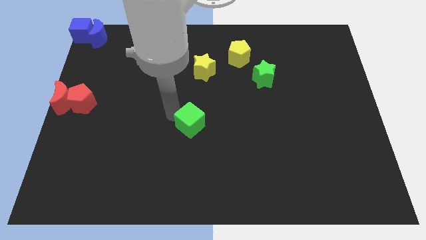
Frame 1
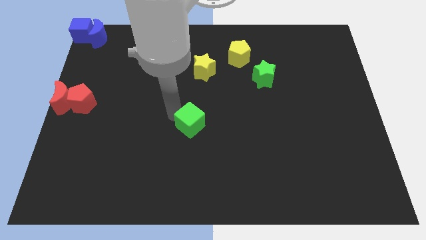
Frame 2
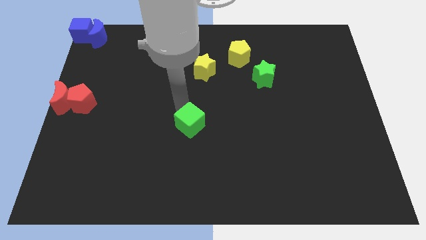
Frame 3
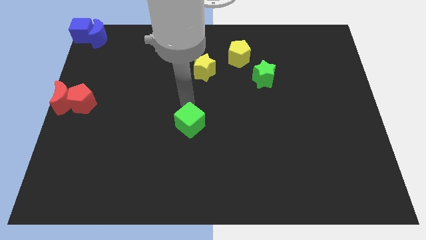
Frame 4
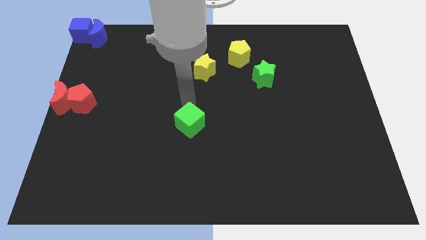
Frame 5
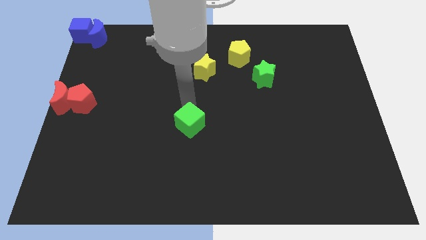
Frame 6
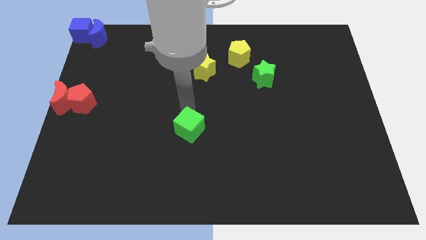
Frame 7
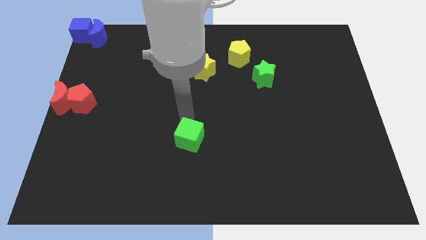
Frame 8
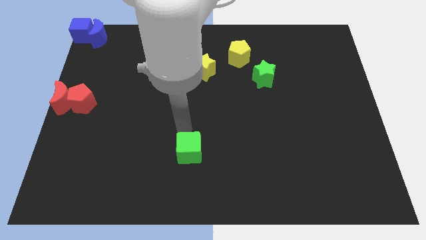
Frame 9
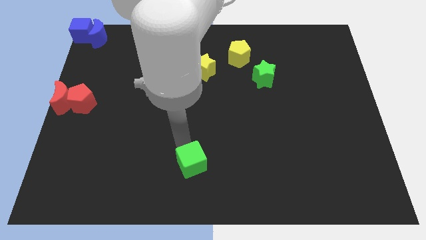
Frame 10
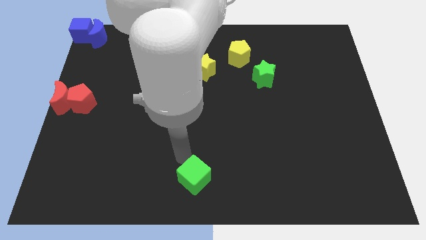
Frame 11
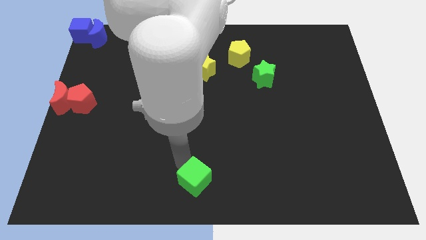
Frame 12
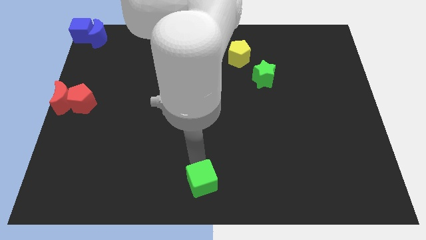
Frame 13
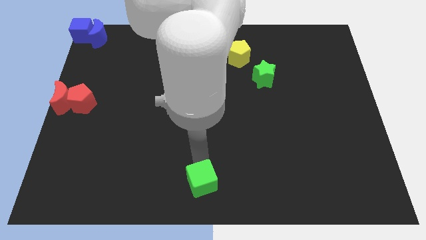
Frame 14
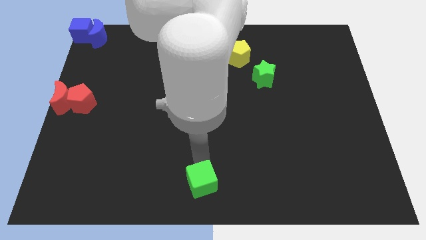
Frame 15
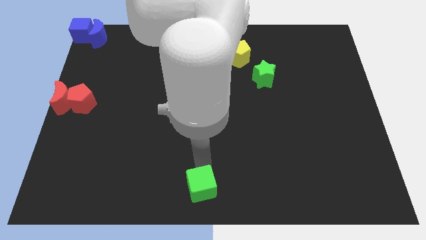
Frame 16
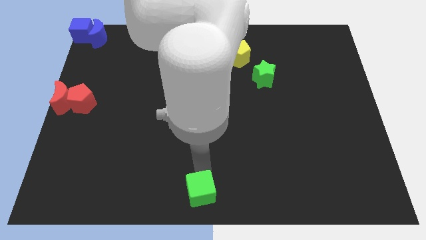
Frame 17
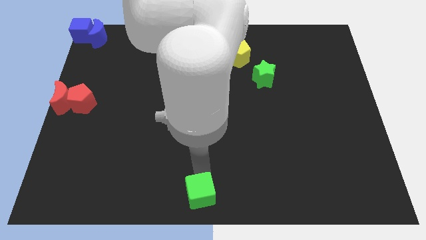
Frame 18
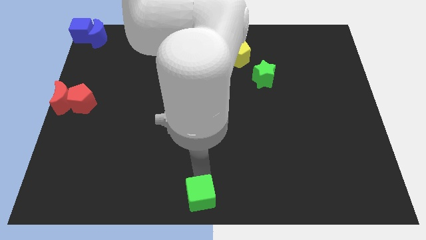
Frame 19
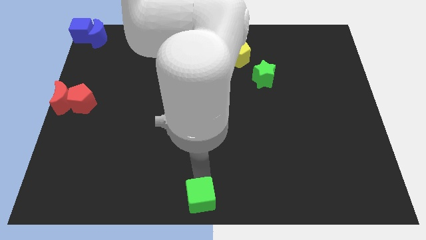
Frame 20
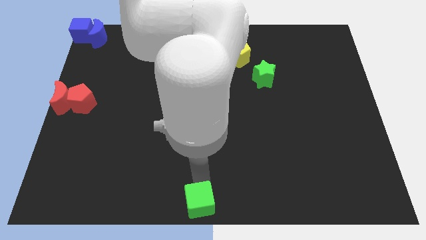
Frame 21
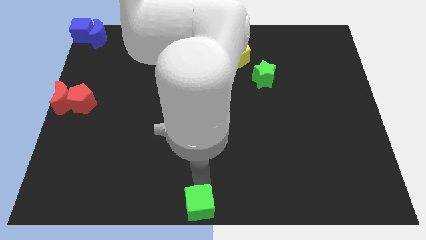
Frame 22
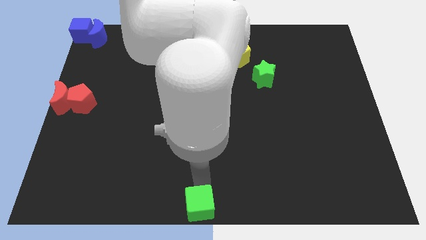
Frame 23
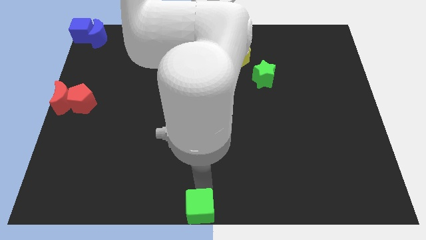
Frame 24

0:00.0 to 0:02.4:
move the green cube to the bottom side of the board

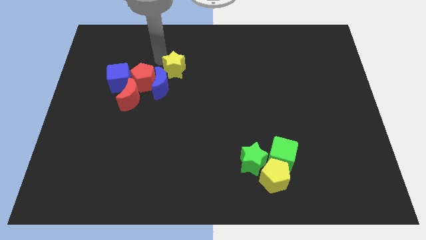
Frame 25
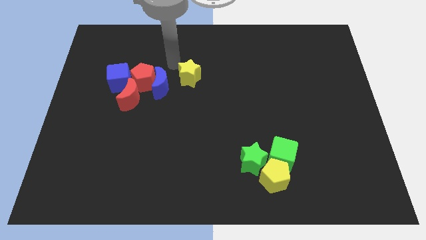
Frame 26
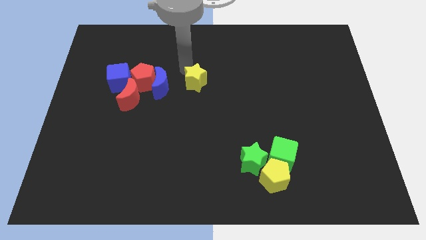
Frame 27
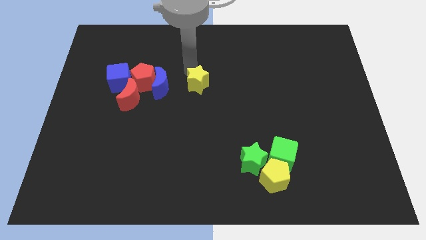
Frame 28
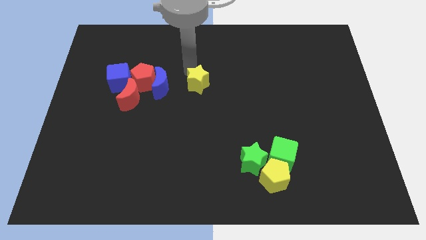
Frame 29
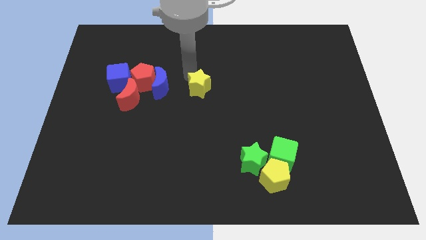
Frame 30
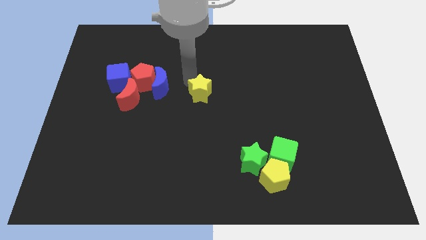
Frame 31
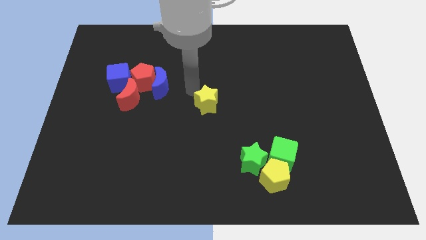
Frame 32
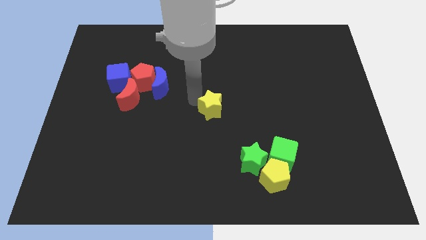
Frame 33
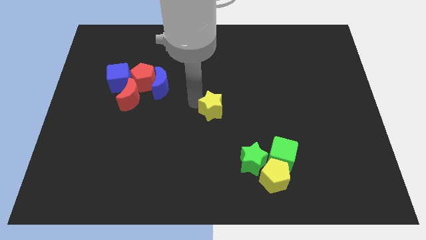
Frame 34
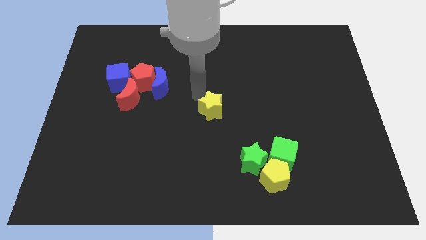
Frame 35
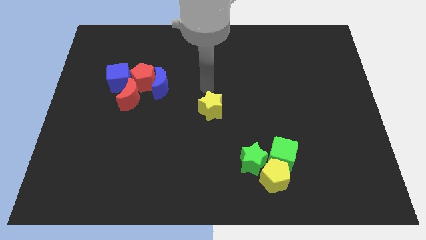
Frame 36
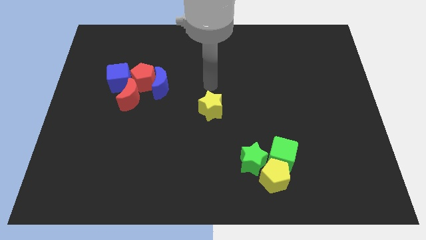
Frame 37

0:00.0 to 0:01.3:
move the yellow star to the center of the board

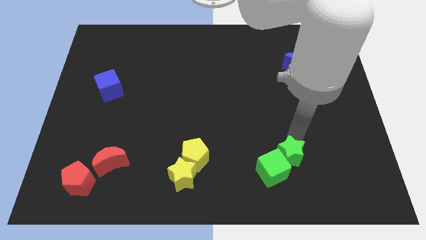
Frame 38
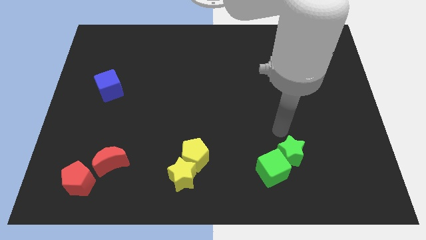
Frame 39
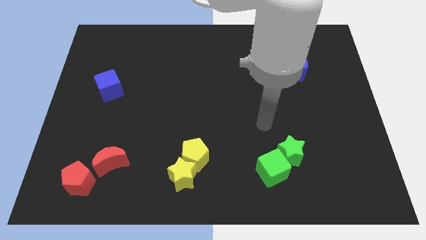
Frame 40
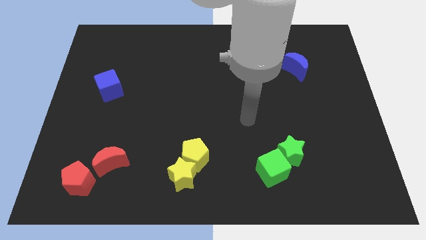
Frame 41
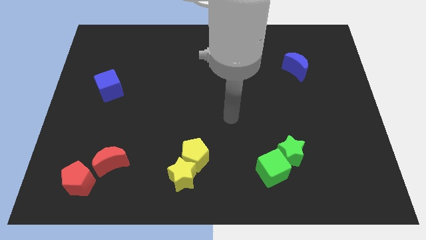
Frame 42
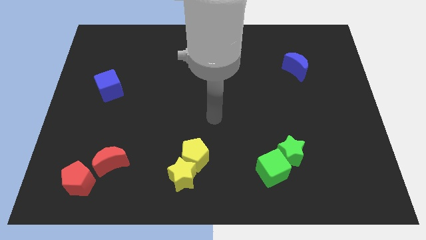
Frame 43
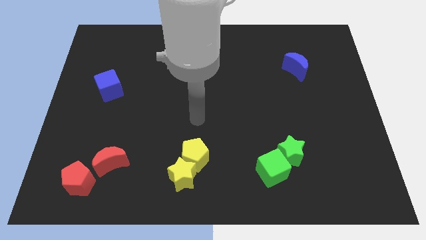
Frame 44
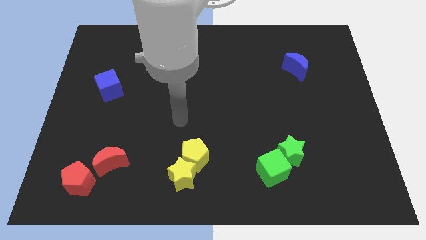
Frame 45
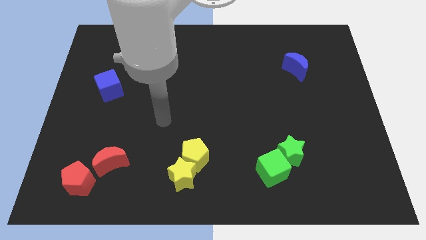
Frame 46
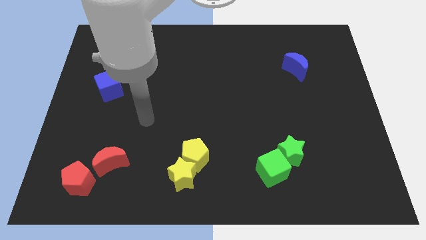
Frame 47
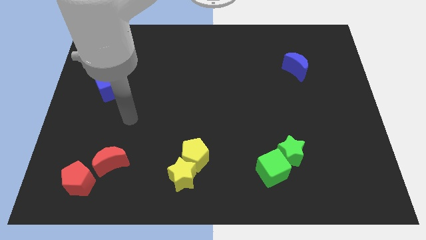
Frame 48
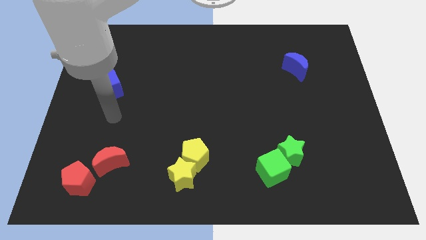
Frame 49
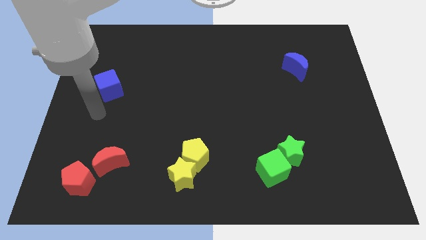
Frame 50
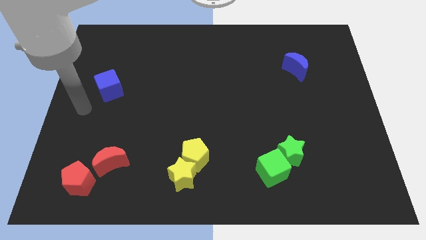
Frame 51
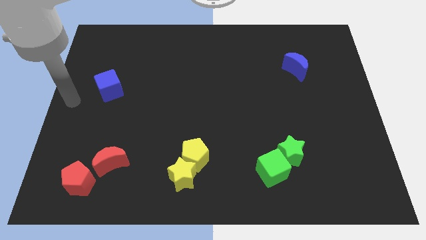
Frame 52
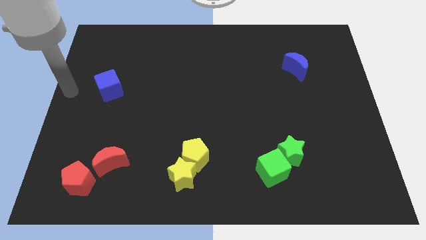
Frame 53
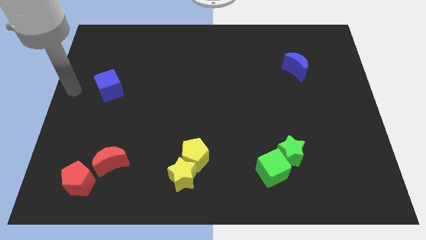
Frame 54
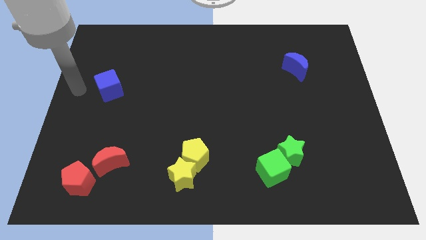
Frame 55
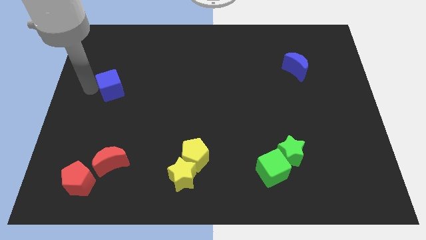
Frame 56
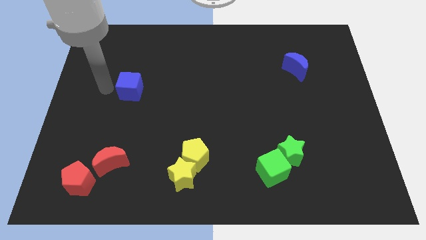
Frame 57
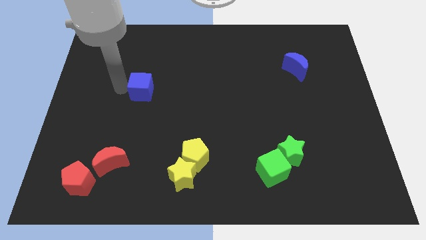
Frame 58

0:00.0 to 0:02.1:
push the blue block slightly towards right

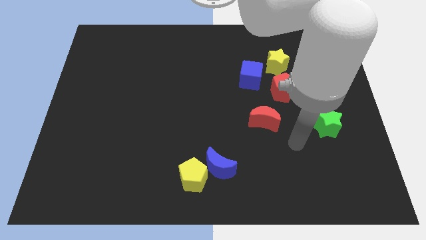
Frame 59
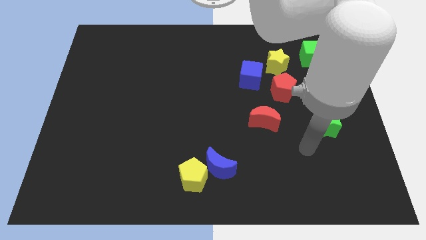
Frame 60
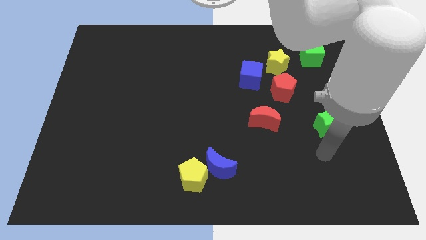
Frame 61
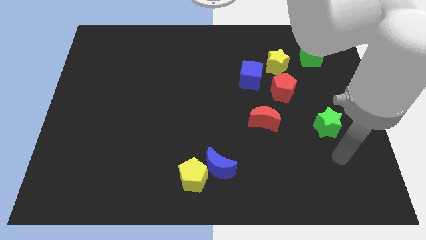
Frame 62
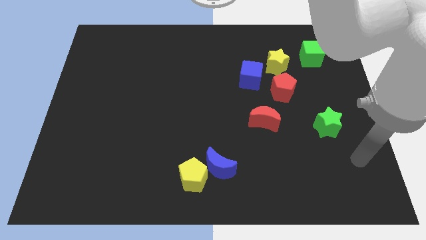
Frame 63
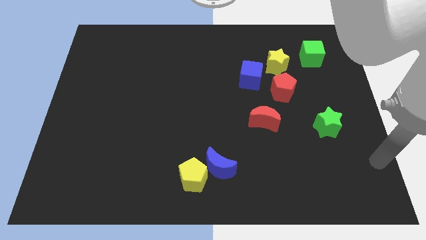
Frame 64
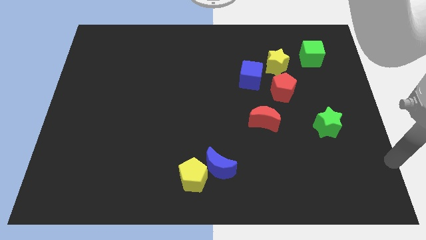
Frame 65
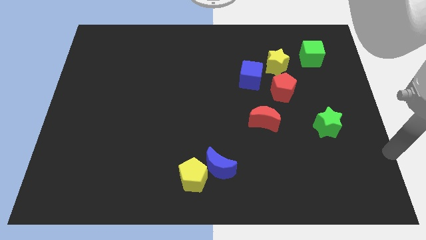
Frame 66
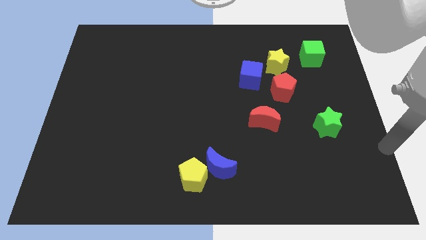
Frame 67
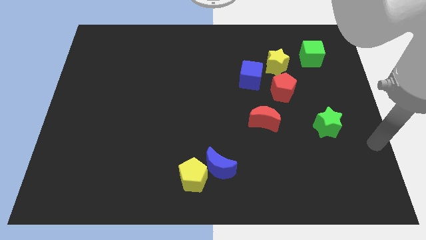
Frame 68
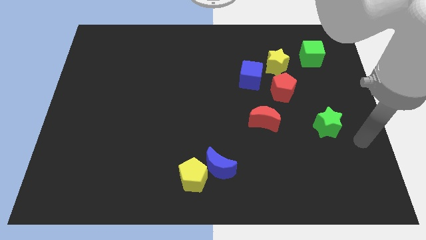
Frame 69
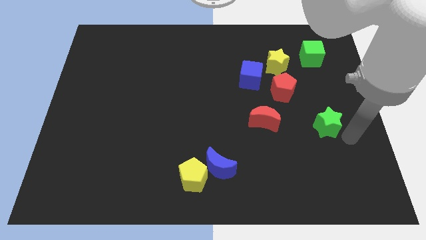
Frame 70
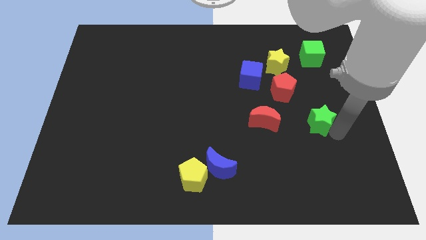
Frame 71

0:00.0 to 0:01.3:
touch the right side of the green star

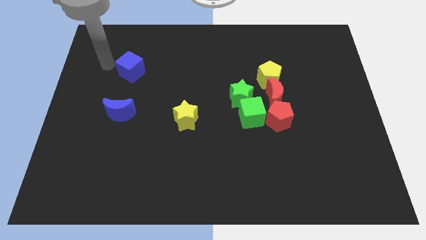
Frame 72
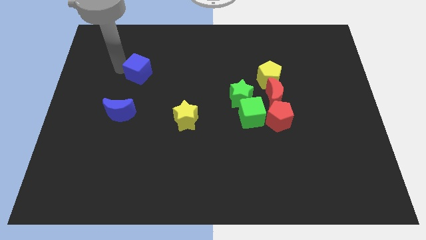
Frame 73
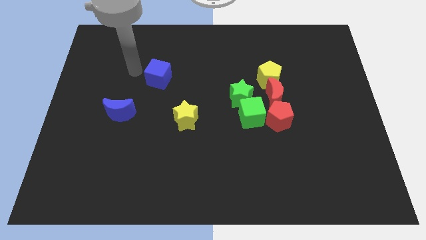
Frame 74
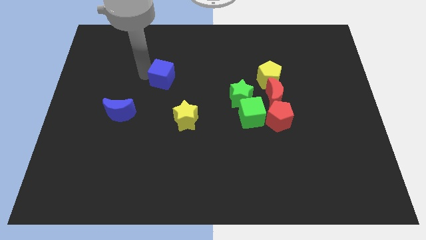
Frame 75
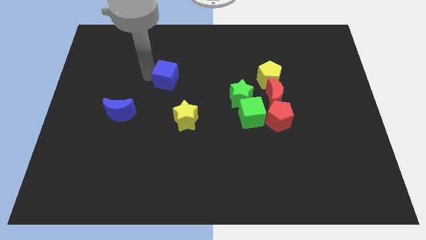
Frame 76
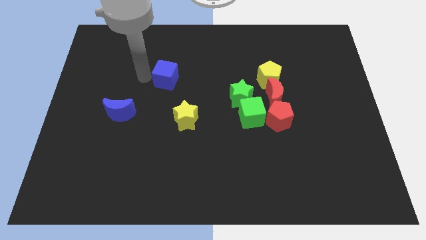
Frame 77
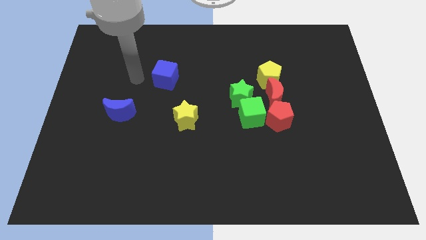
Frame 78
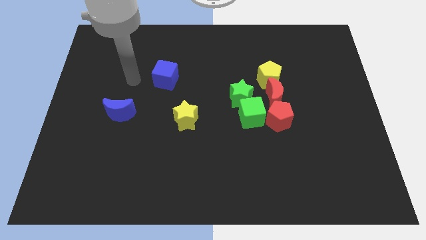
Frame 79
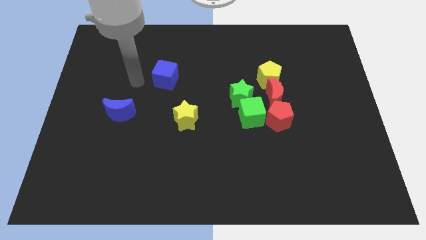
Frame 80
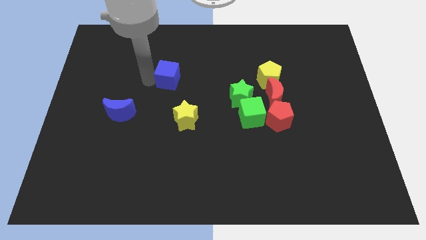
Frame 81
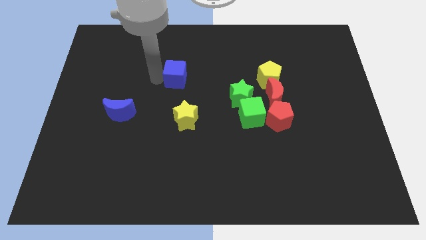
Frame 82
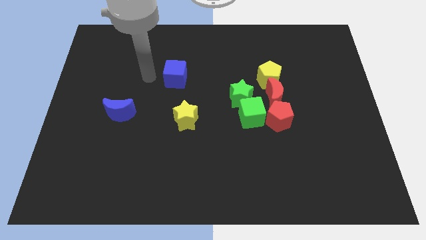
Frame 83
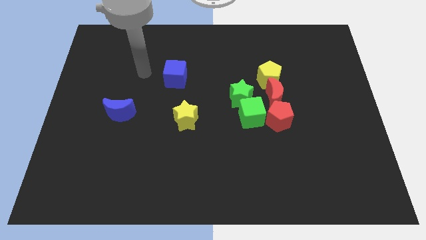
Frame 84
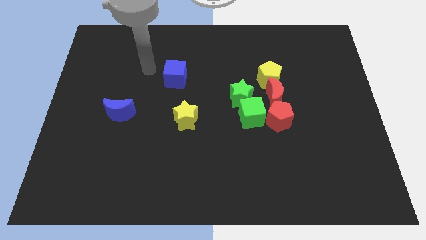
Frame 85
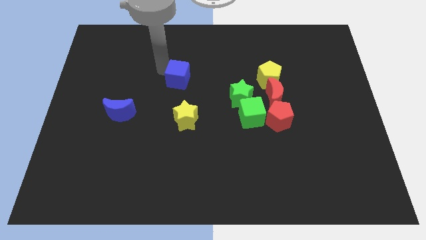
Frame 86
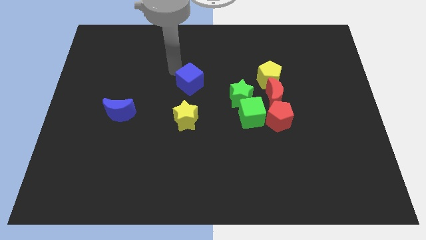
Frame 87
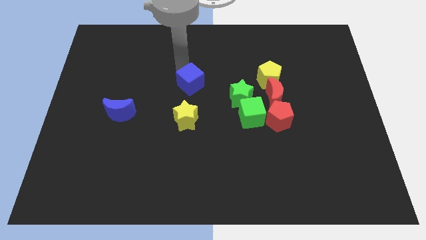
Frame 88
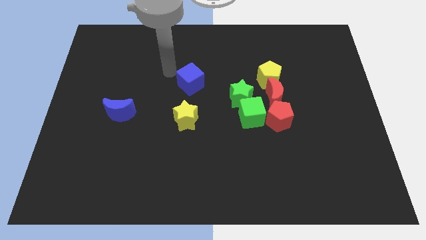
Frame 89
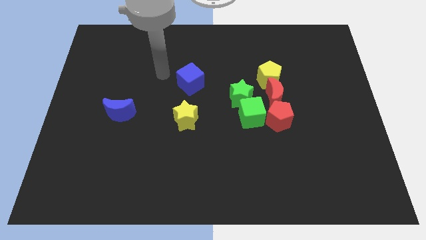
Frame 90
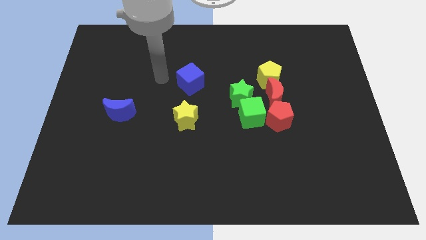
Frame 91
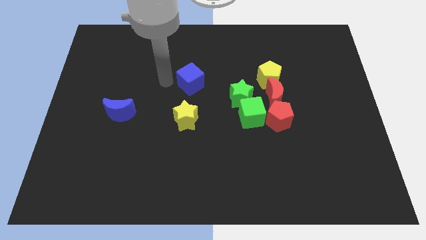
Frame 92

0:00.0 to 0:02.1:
place blue cube on top of yellow star
